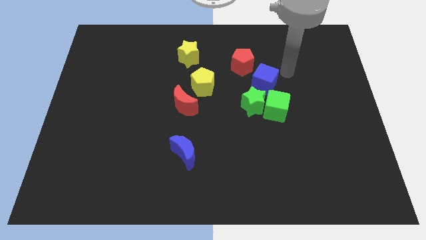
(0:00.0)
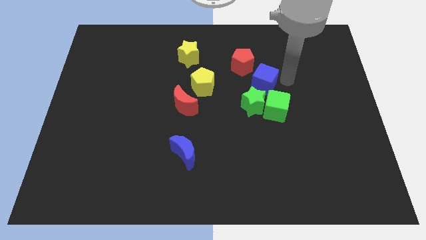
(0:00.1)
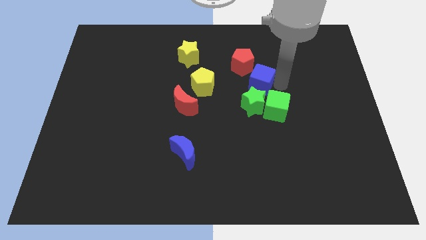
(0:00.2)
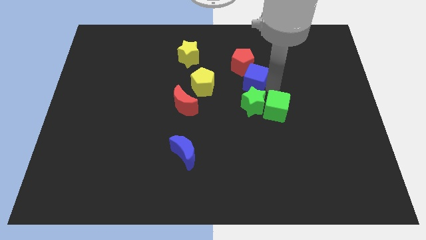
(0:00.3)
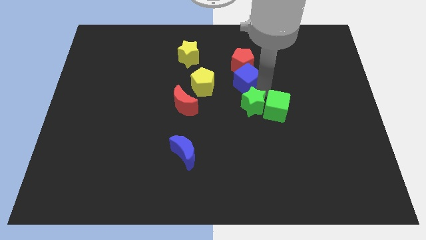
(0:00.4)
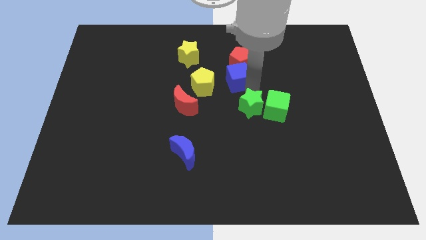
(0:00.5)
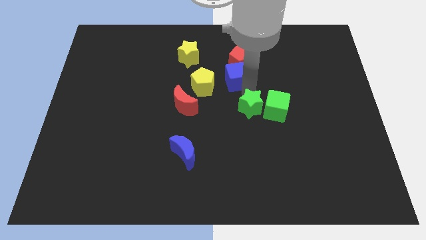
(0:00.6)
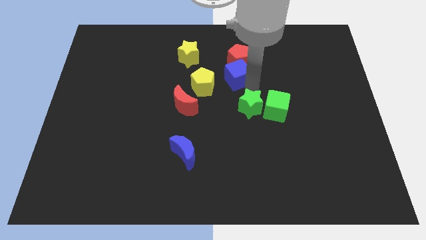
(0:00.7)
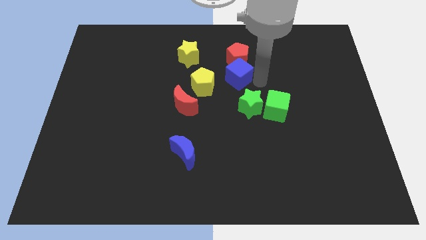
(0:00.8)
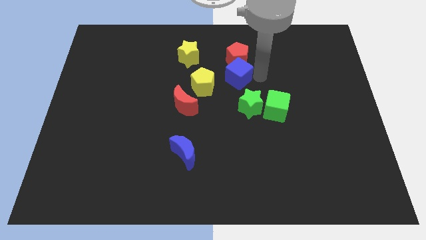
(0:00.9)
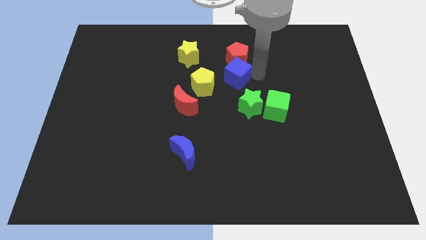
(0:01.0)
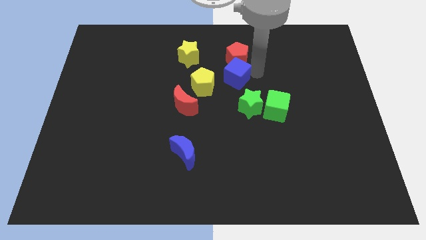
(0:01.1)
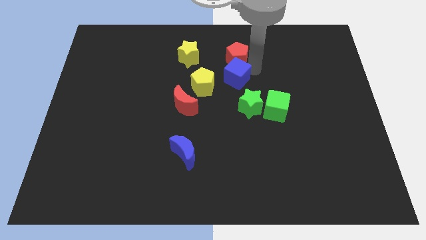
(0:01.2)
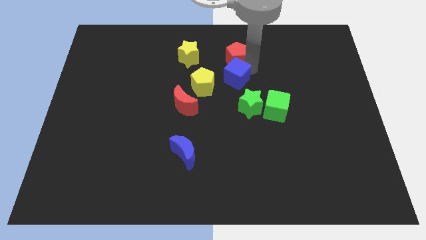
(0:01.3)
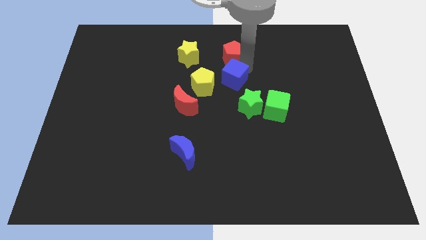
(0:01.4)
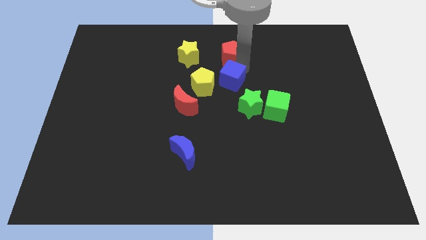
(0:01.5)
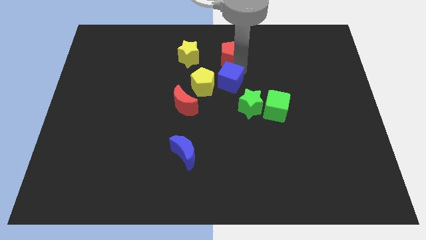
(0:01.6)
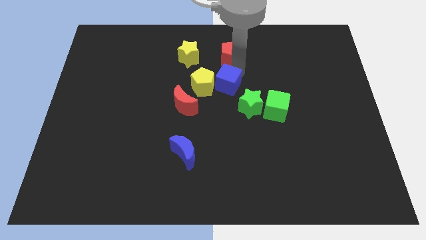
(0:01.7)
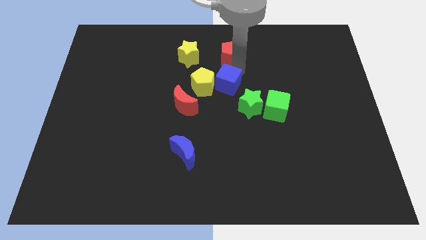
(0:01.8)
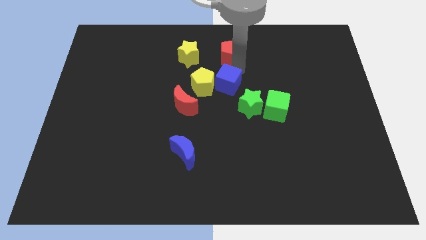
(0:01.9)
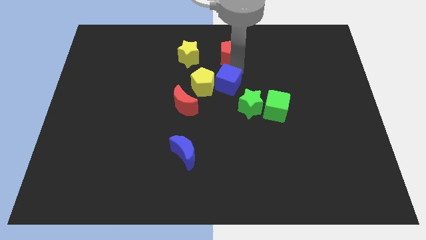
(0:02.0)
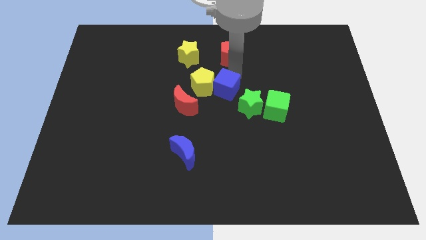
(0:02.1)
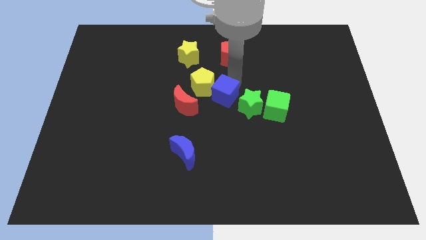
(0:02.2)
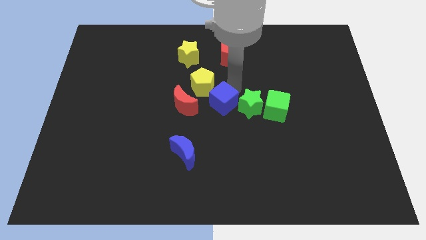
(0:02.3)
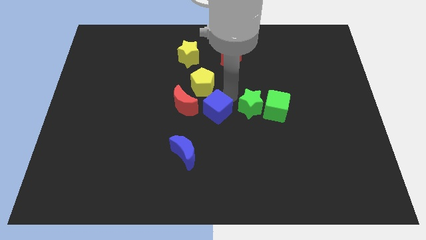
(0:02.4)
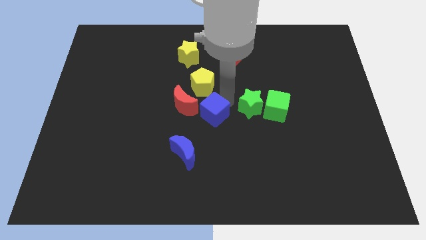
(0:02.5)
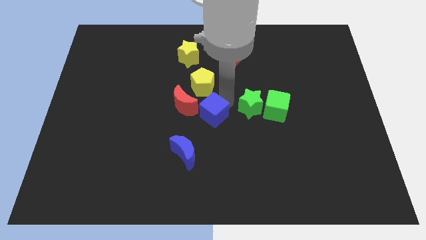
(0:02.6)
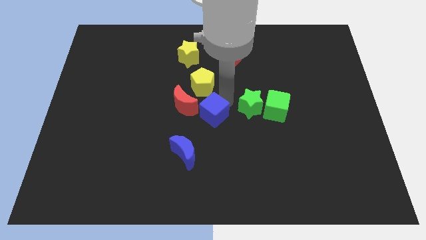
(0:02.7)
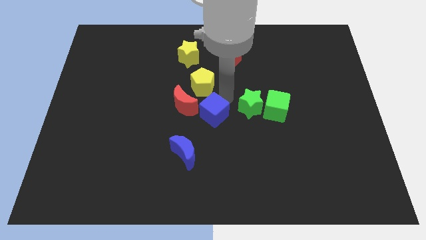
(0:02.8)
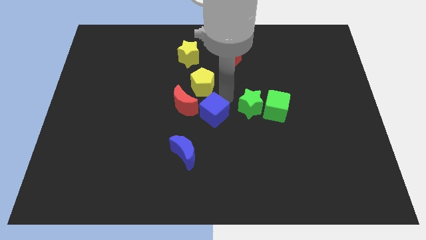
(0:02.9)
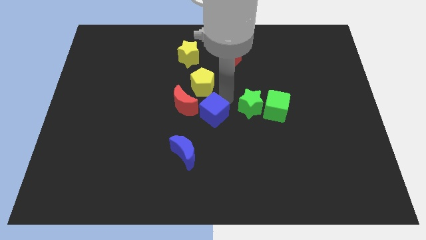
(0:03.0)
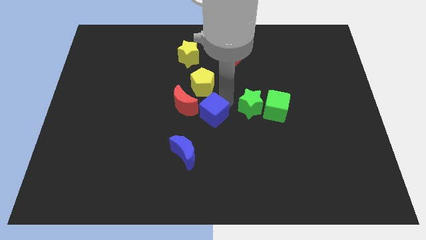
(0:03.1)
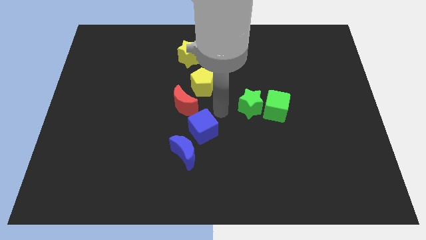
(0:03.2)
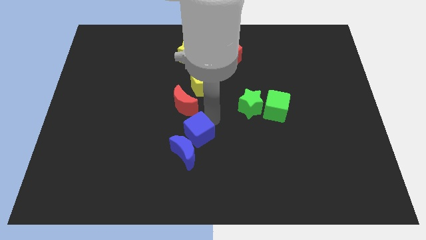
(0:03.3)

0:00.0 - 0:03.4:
drag the blue cube towards the blue crescent

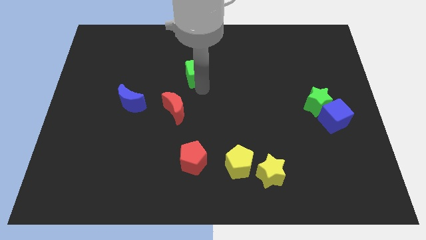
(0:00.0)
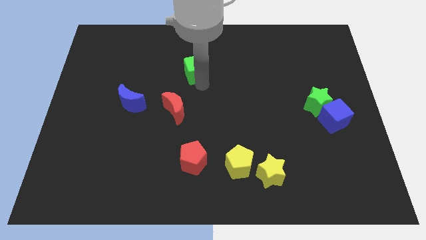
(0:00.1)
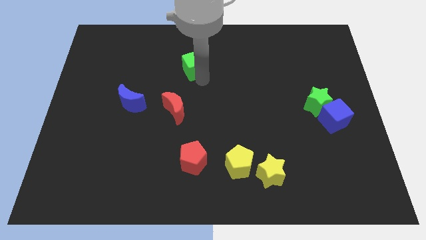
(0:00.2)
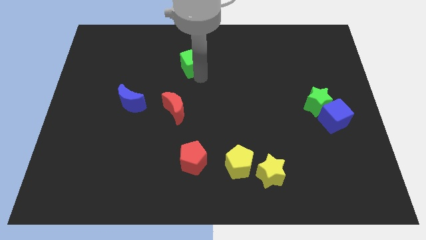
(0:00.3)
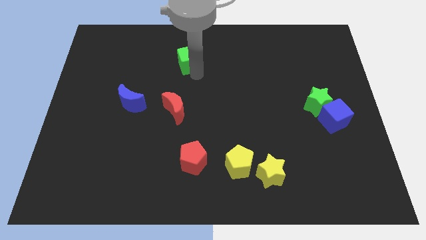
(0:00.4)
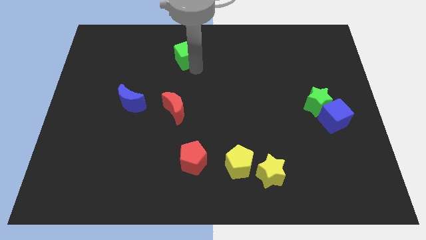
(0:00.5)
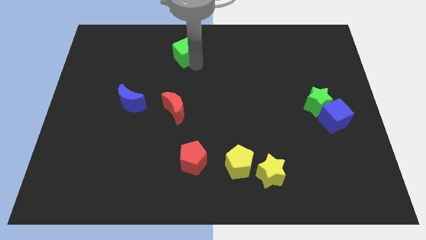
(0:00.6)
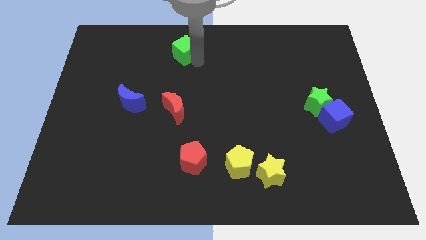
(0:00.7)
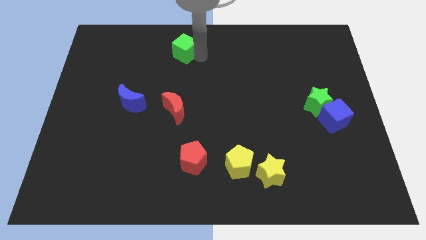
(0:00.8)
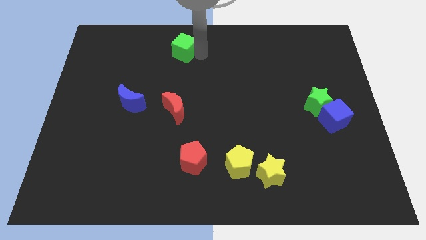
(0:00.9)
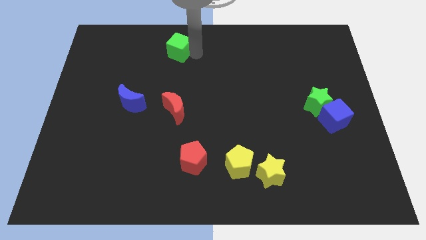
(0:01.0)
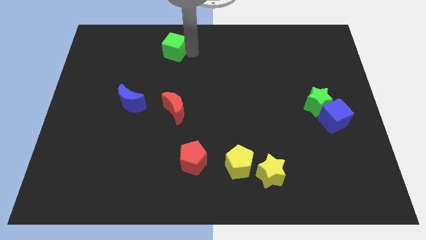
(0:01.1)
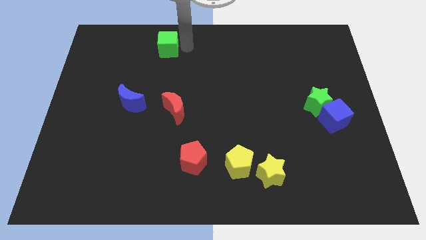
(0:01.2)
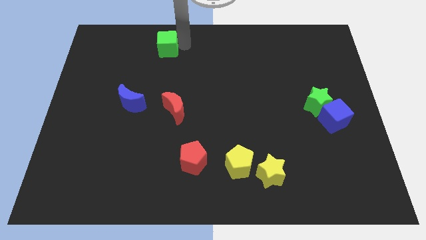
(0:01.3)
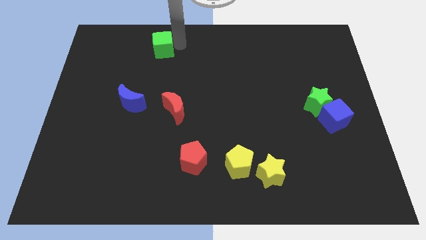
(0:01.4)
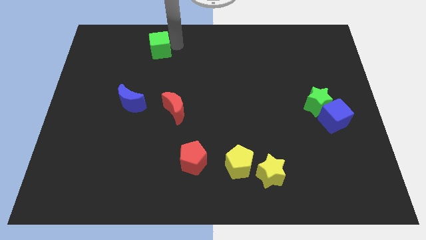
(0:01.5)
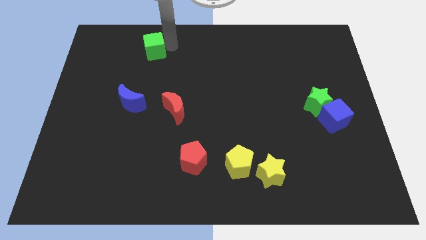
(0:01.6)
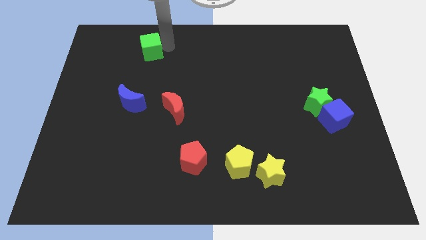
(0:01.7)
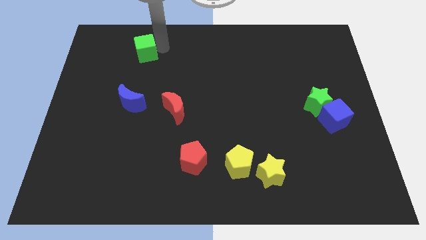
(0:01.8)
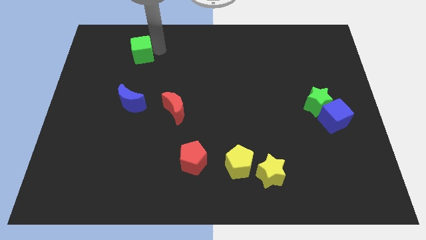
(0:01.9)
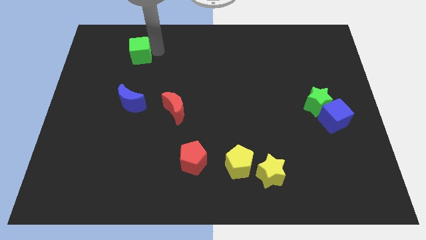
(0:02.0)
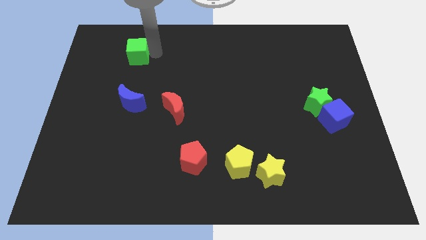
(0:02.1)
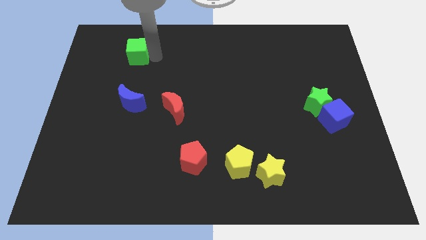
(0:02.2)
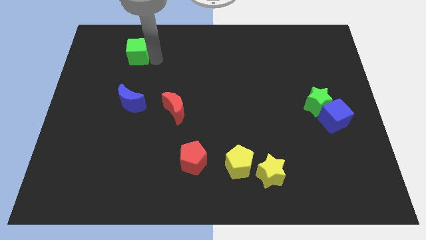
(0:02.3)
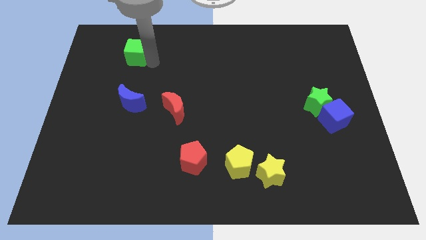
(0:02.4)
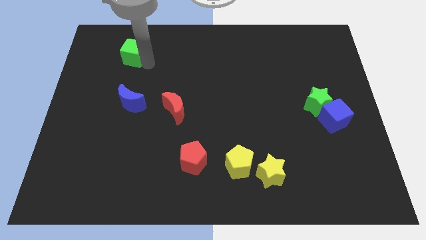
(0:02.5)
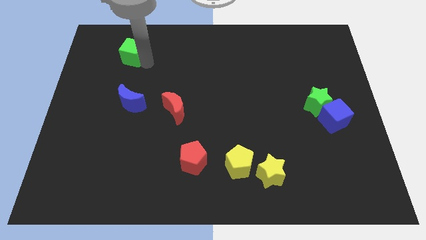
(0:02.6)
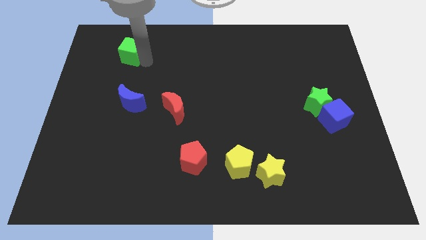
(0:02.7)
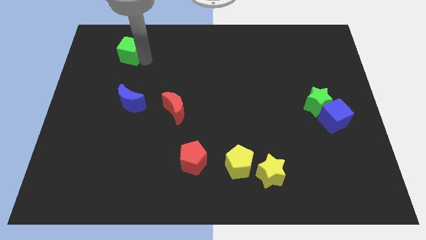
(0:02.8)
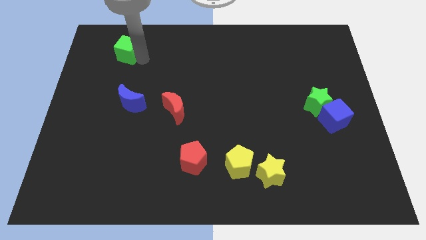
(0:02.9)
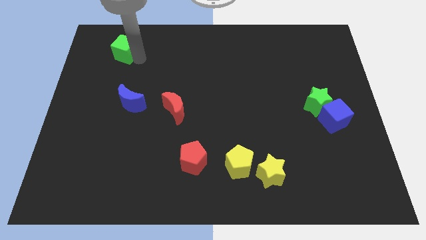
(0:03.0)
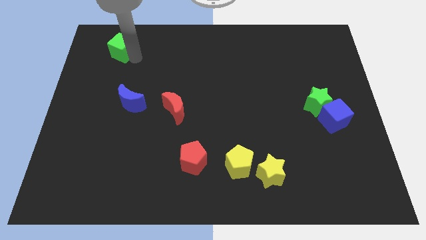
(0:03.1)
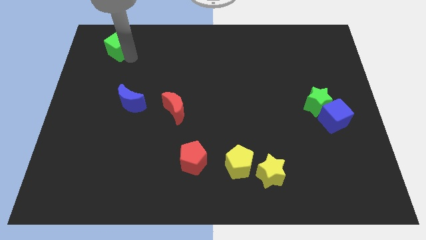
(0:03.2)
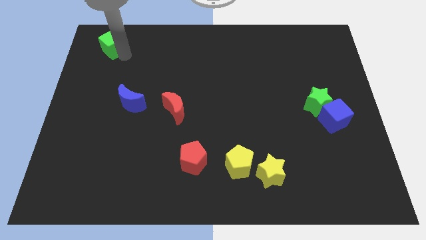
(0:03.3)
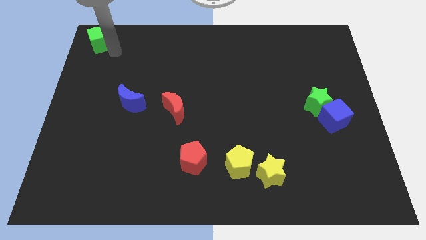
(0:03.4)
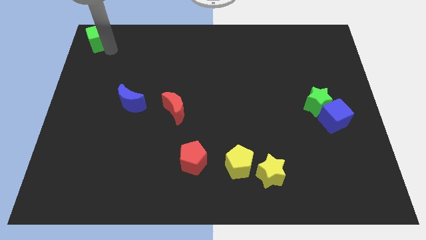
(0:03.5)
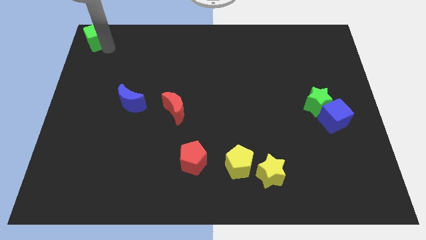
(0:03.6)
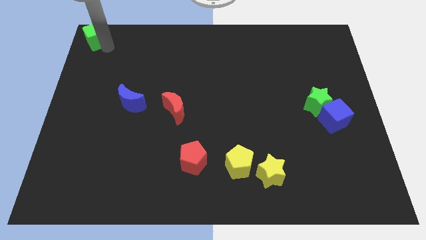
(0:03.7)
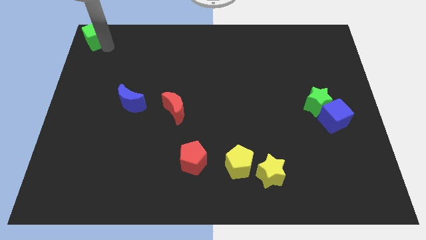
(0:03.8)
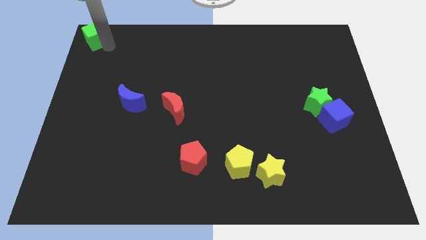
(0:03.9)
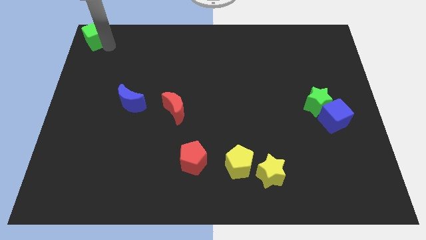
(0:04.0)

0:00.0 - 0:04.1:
place the green cube at the top left corner of the board

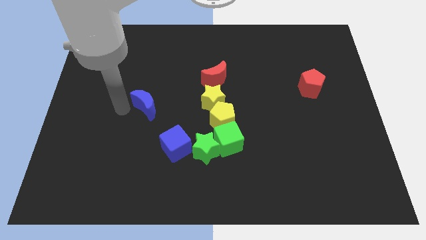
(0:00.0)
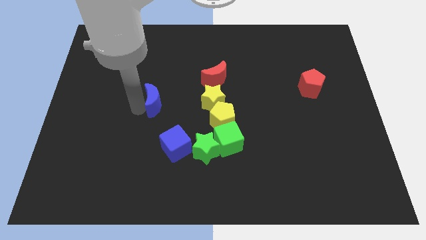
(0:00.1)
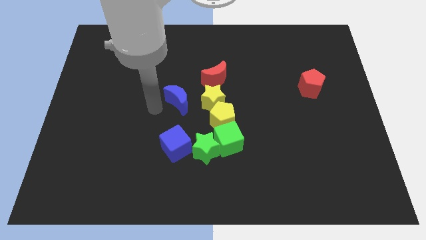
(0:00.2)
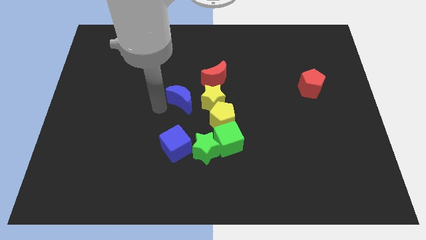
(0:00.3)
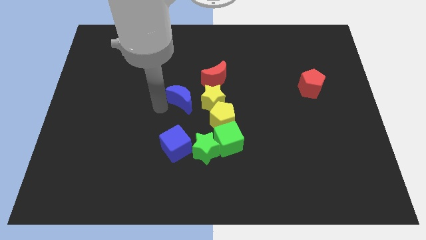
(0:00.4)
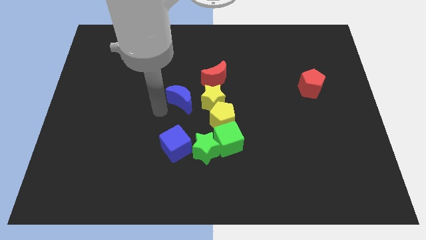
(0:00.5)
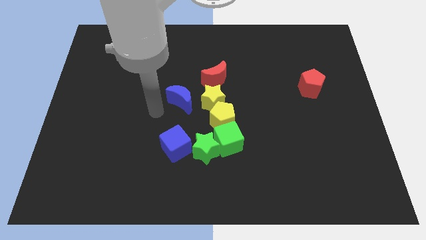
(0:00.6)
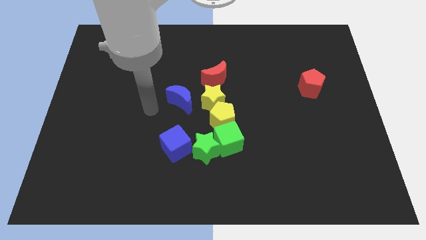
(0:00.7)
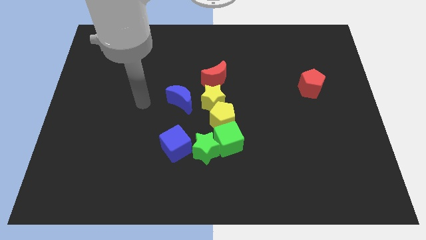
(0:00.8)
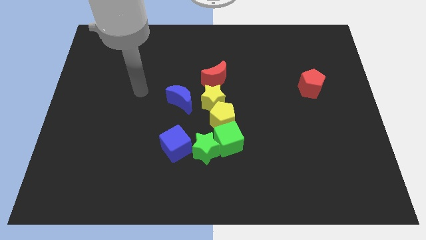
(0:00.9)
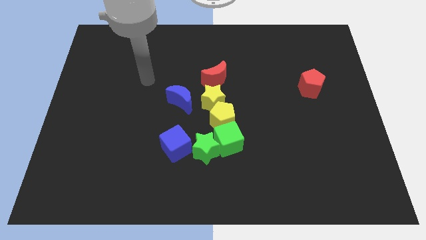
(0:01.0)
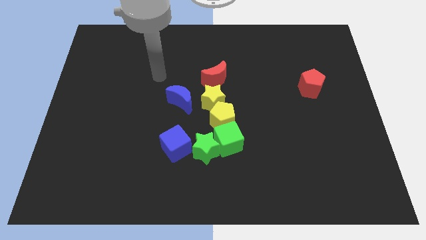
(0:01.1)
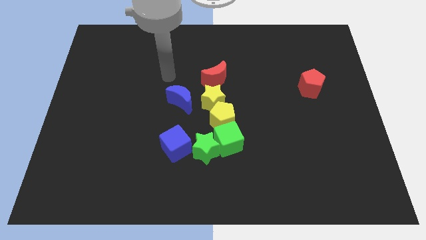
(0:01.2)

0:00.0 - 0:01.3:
move the blue moon right to the yellow star
